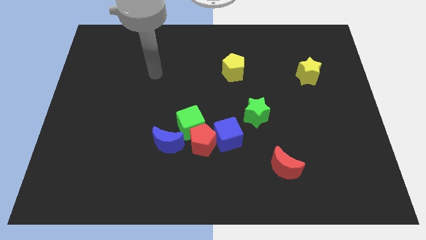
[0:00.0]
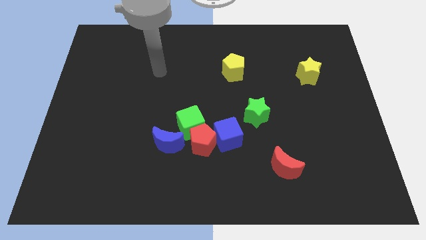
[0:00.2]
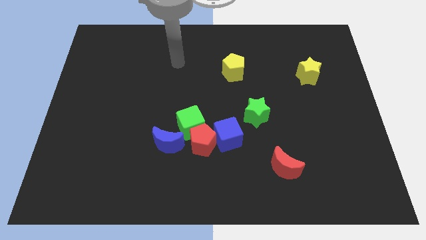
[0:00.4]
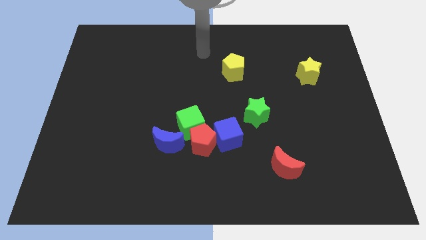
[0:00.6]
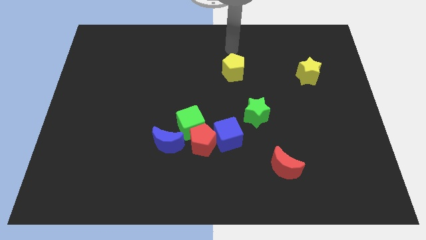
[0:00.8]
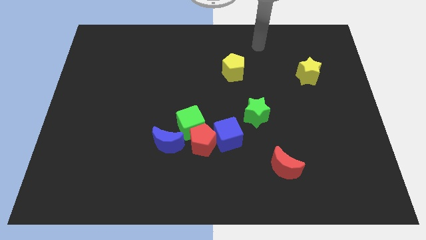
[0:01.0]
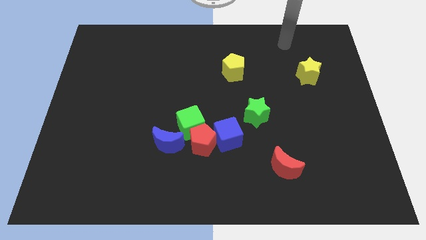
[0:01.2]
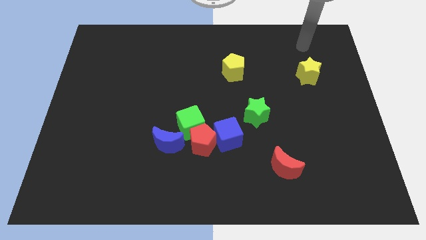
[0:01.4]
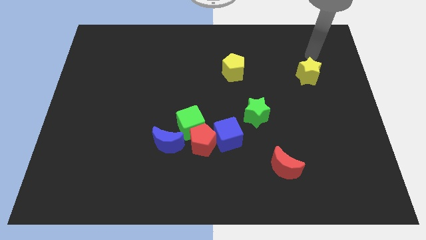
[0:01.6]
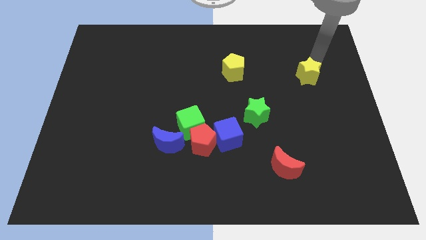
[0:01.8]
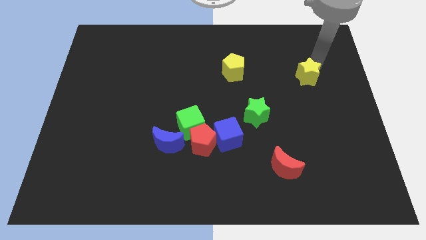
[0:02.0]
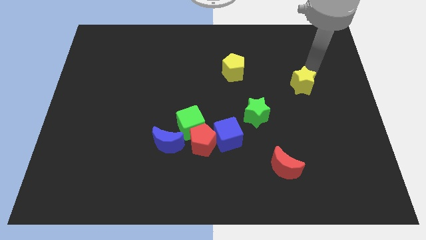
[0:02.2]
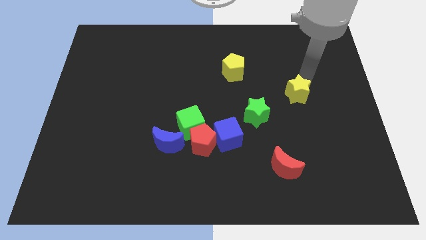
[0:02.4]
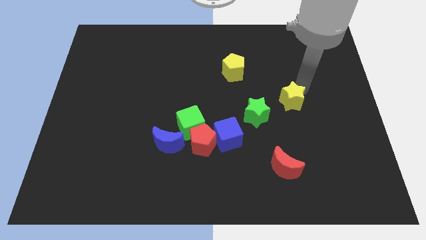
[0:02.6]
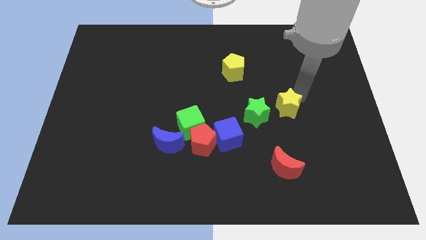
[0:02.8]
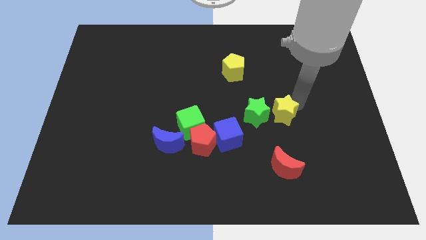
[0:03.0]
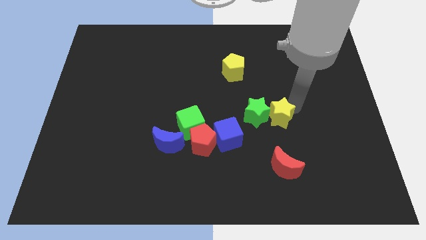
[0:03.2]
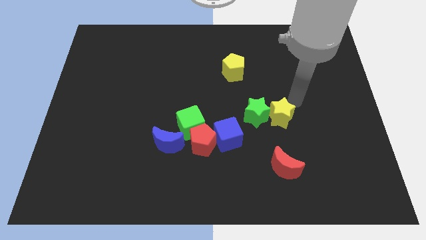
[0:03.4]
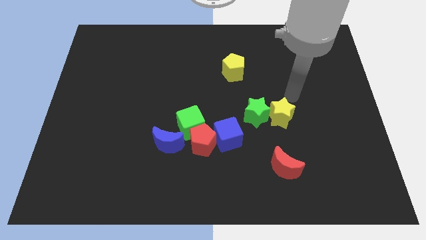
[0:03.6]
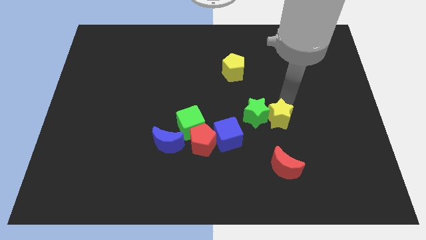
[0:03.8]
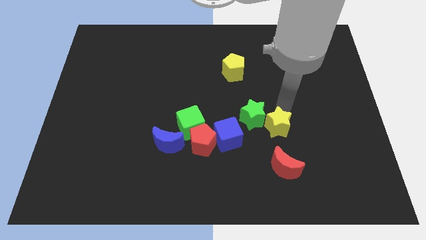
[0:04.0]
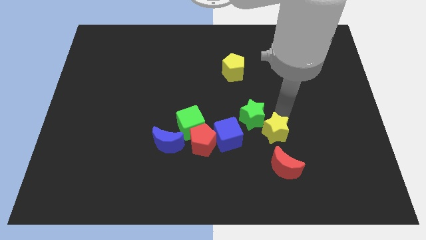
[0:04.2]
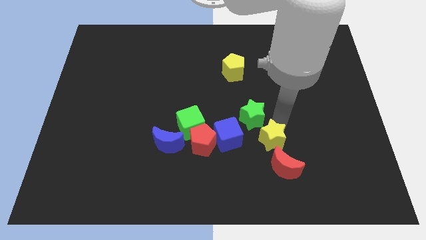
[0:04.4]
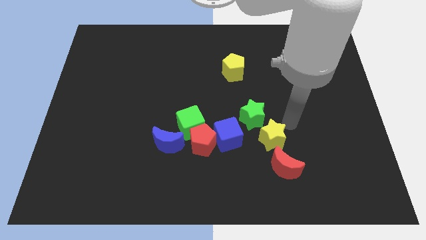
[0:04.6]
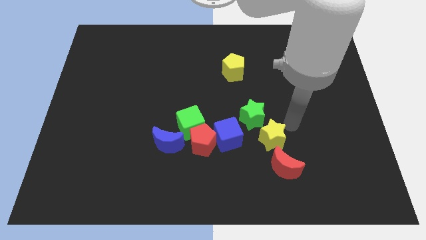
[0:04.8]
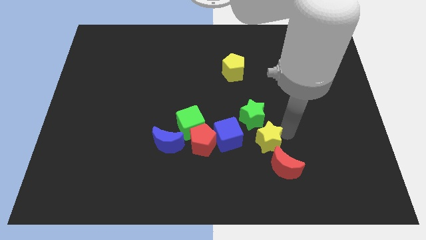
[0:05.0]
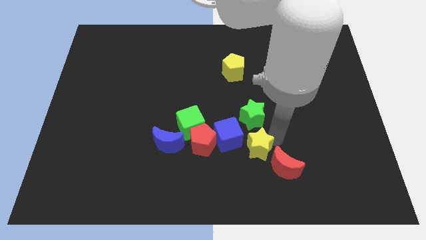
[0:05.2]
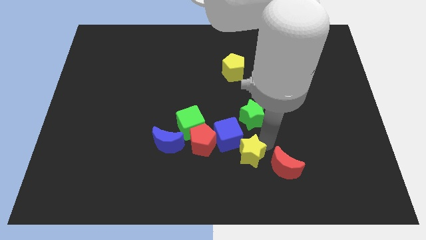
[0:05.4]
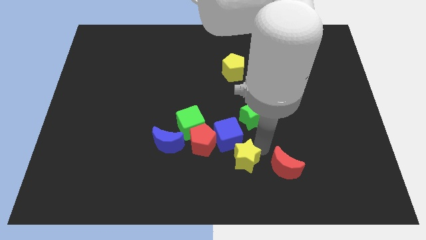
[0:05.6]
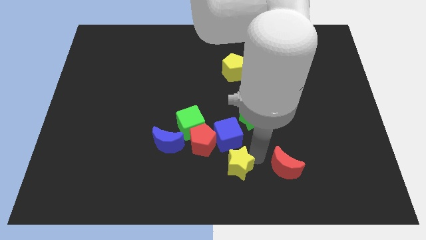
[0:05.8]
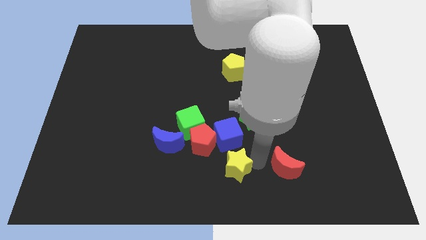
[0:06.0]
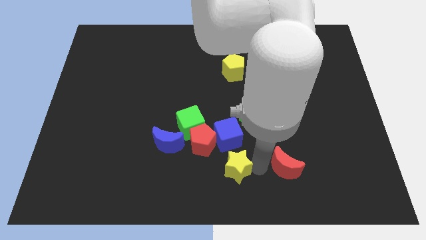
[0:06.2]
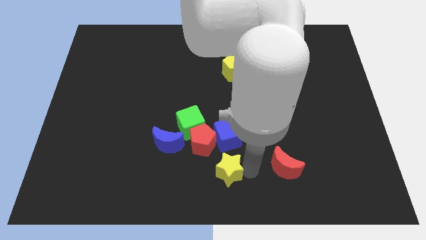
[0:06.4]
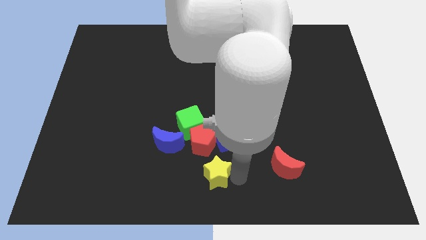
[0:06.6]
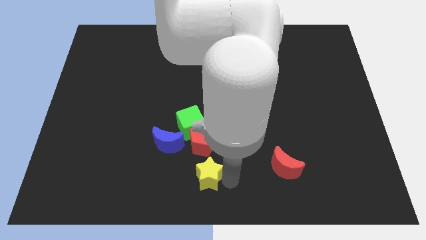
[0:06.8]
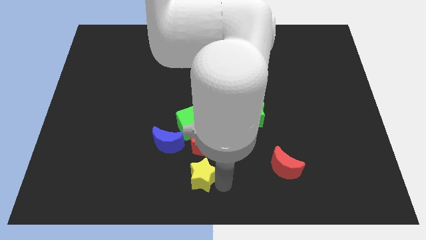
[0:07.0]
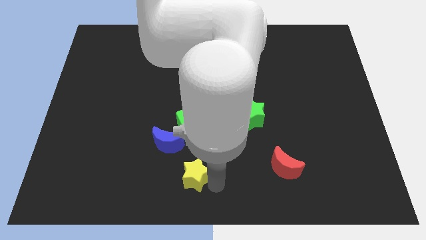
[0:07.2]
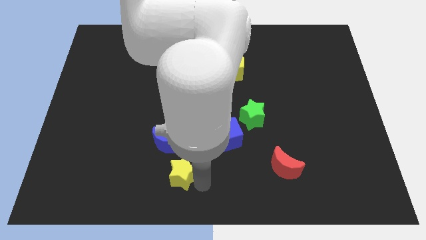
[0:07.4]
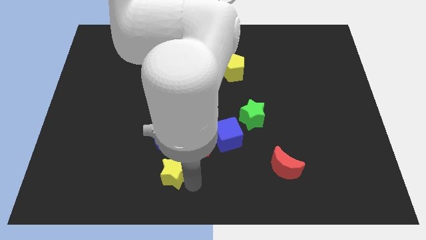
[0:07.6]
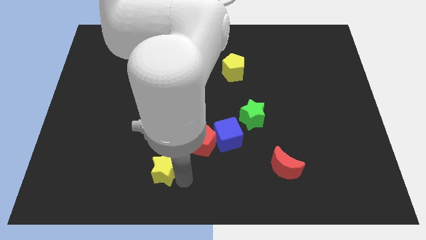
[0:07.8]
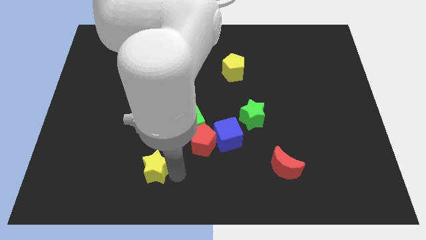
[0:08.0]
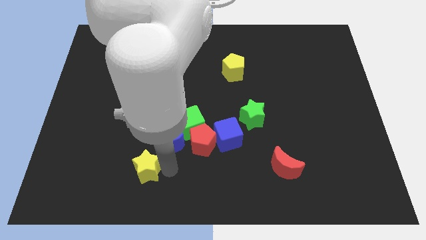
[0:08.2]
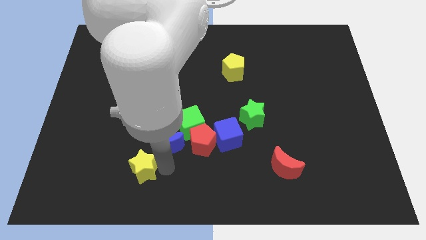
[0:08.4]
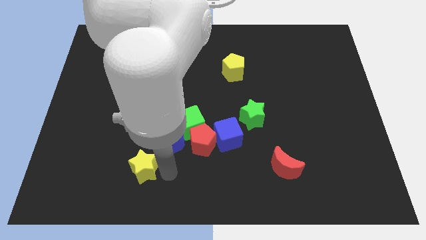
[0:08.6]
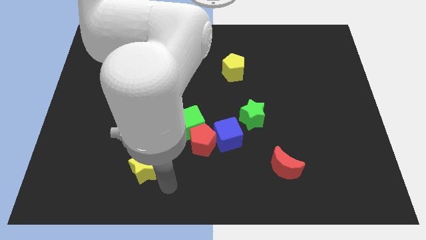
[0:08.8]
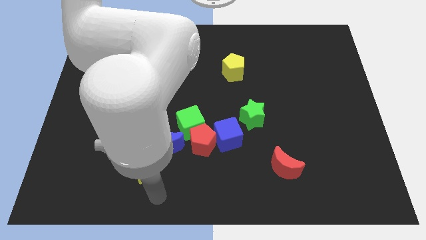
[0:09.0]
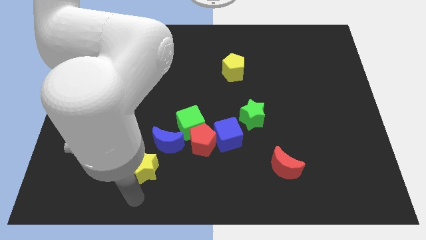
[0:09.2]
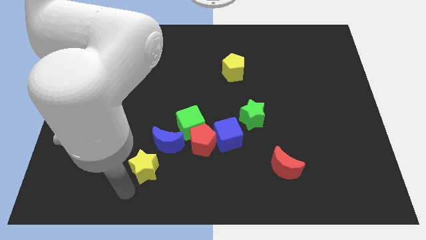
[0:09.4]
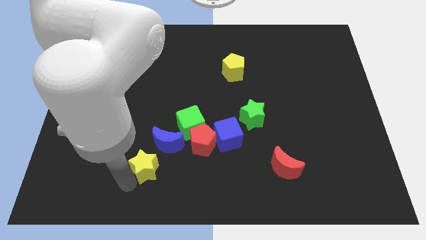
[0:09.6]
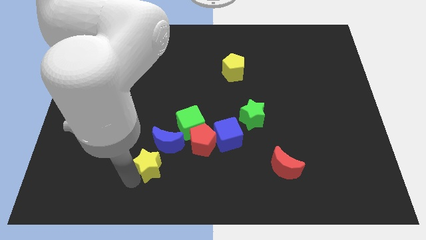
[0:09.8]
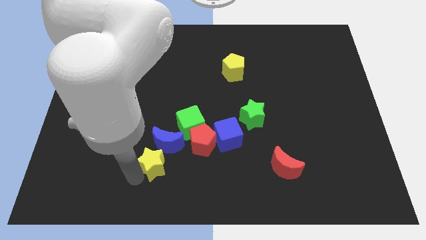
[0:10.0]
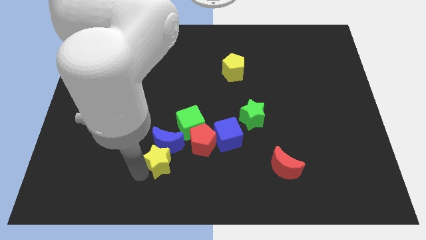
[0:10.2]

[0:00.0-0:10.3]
slide the yellow star next to the blue moon

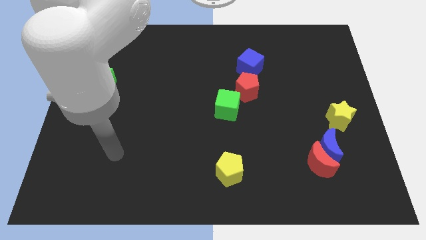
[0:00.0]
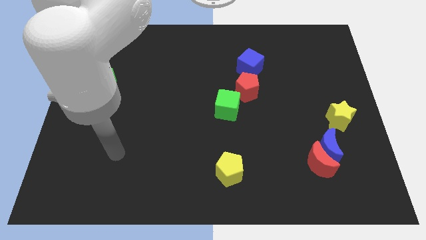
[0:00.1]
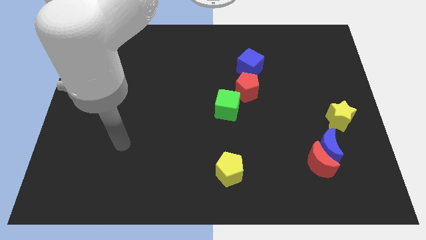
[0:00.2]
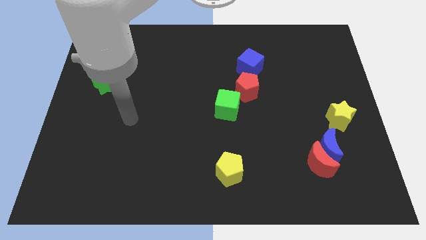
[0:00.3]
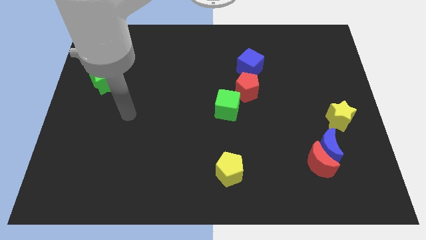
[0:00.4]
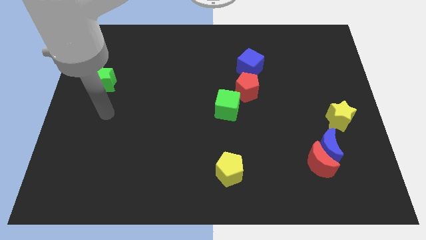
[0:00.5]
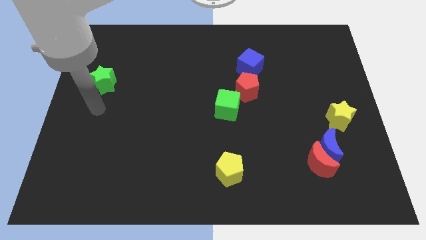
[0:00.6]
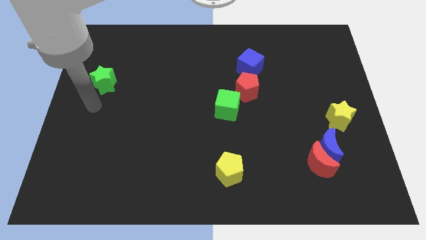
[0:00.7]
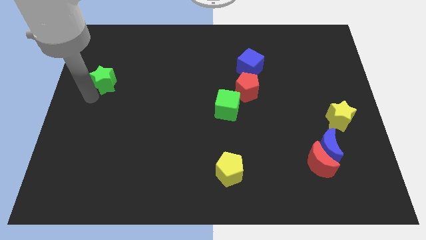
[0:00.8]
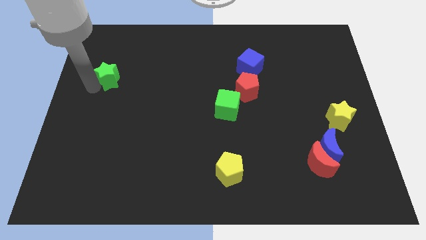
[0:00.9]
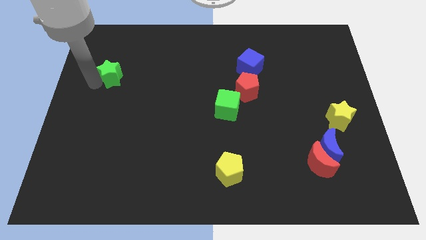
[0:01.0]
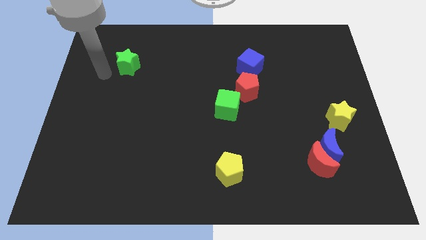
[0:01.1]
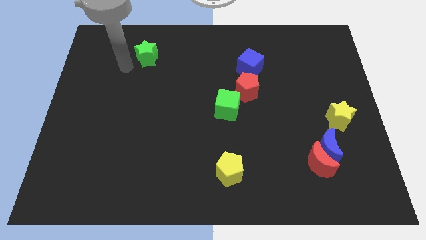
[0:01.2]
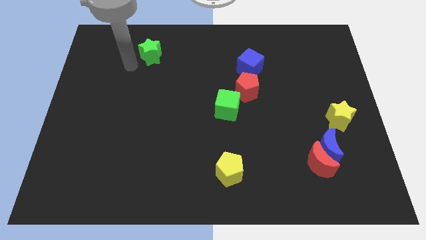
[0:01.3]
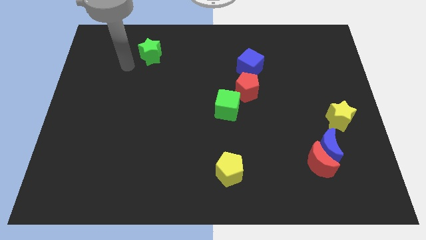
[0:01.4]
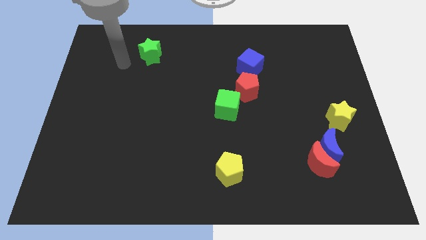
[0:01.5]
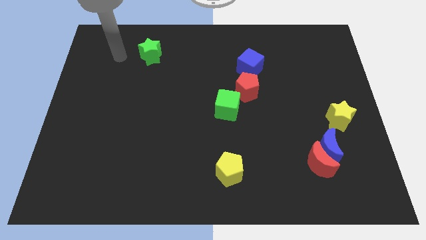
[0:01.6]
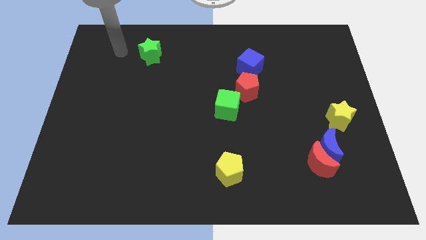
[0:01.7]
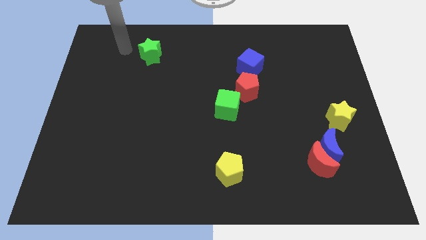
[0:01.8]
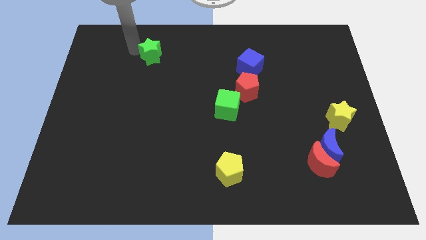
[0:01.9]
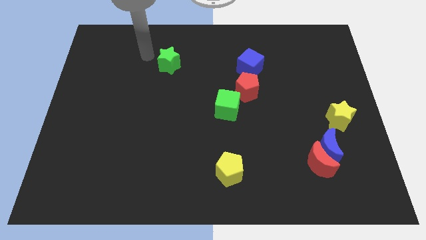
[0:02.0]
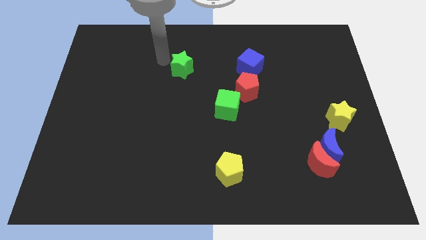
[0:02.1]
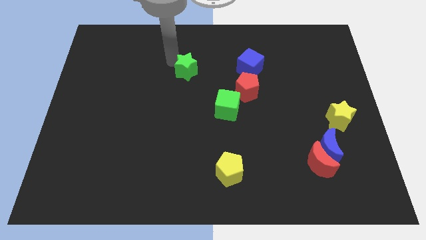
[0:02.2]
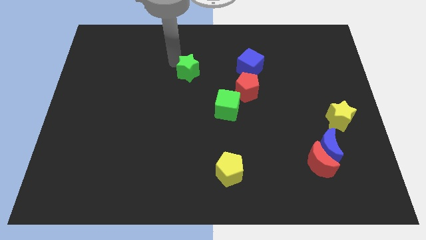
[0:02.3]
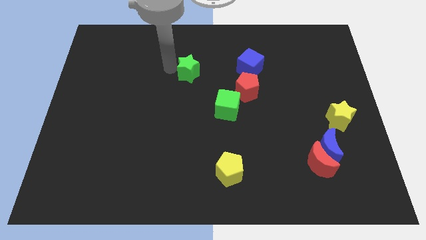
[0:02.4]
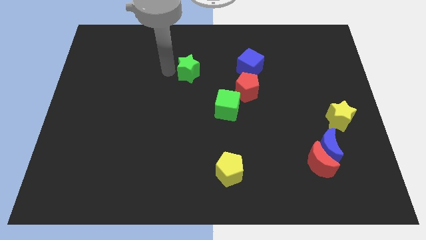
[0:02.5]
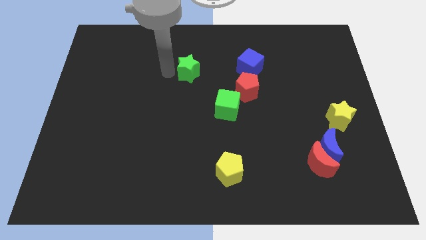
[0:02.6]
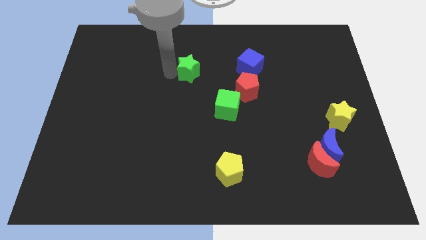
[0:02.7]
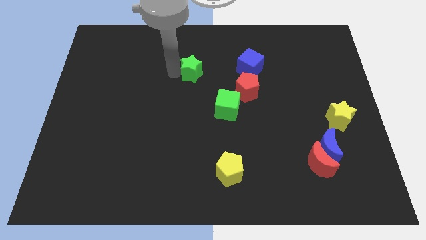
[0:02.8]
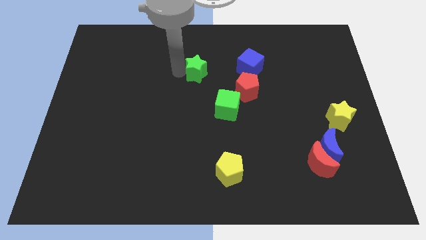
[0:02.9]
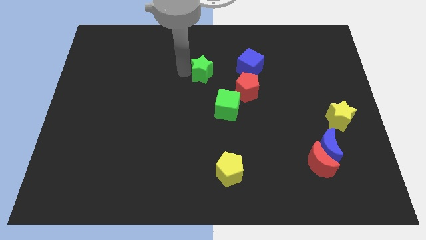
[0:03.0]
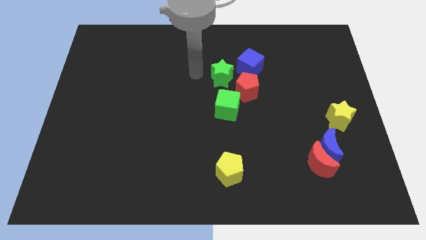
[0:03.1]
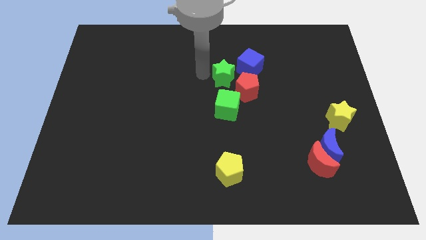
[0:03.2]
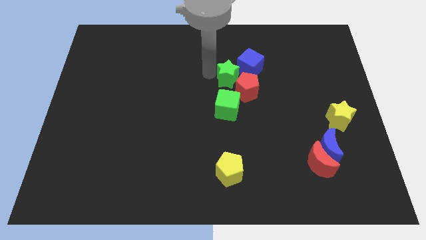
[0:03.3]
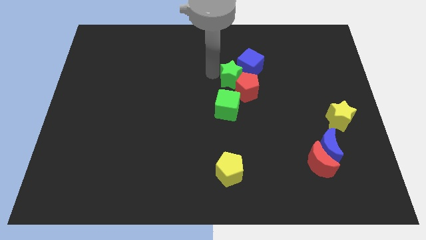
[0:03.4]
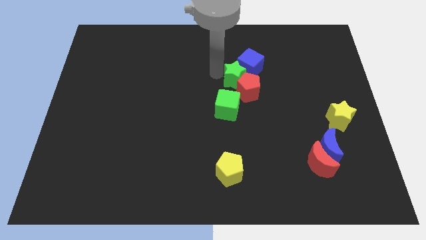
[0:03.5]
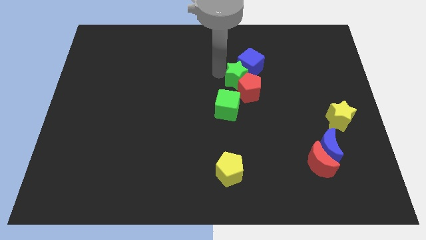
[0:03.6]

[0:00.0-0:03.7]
put the green star to the blue cube
